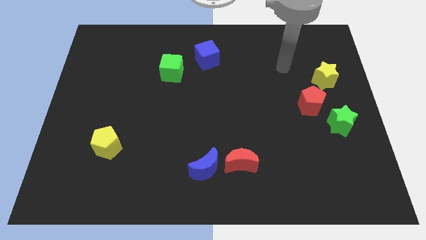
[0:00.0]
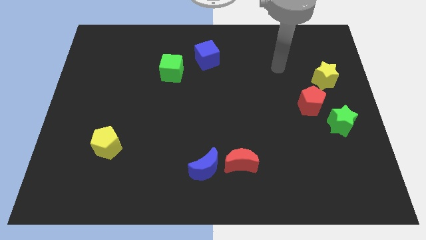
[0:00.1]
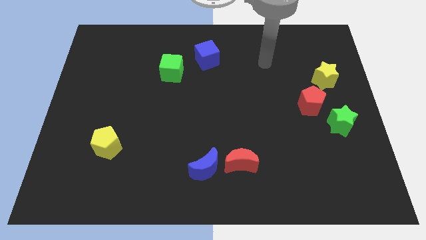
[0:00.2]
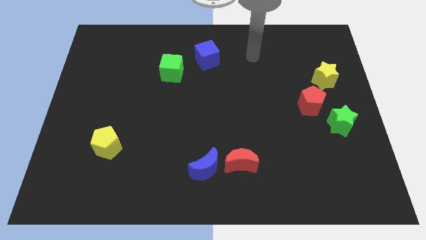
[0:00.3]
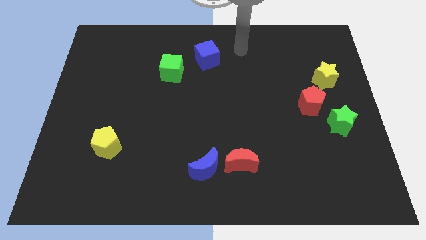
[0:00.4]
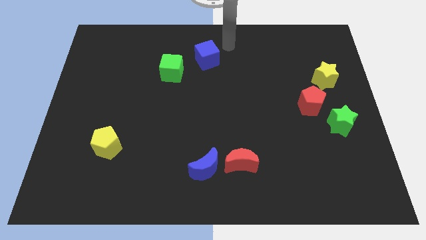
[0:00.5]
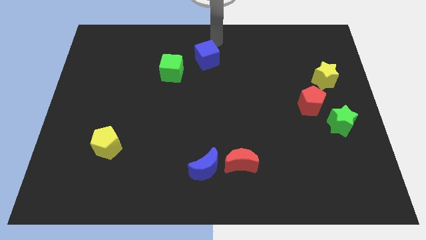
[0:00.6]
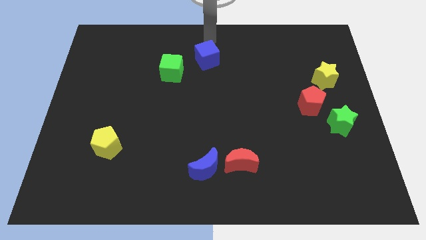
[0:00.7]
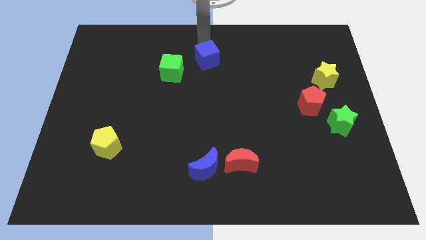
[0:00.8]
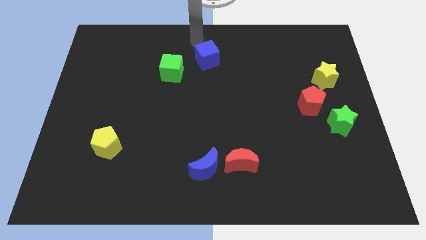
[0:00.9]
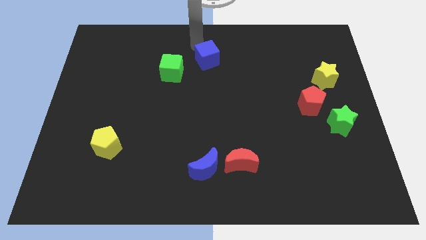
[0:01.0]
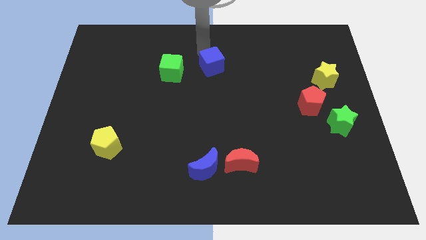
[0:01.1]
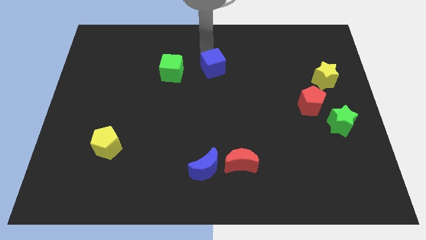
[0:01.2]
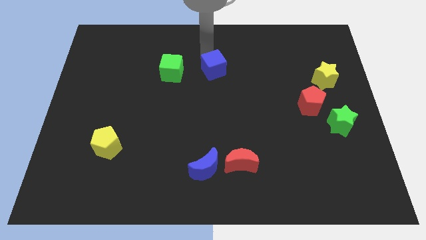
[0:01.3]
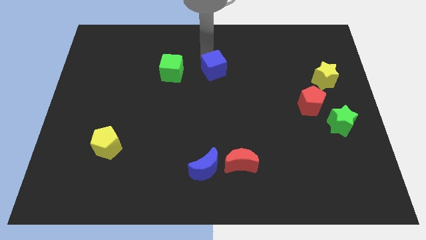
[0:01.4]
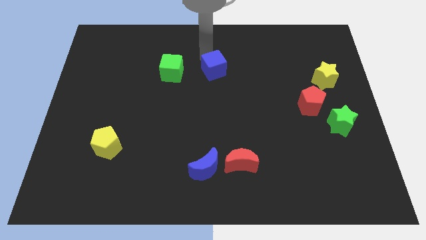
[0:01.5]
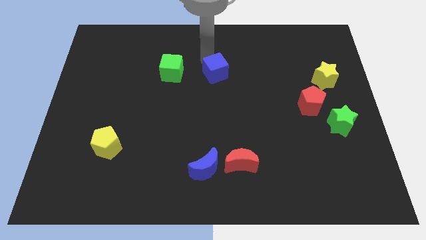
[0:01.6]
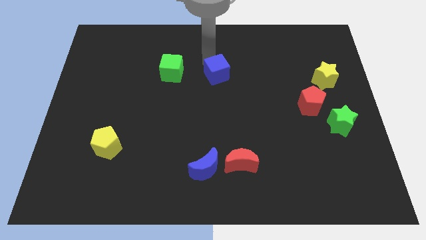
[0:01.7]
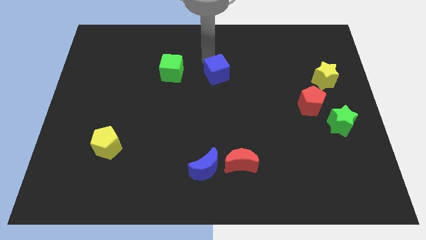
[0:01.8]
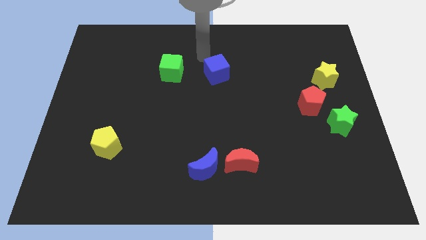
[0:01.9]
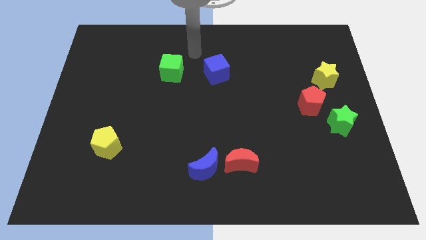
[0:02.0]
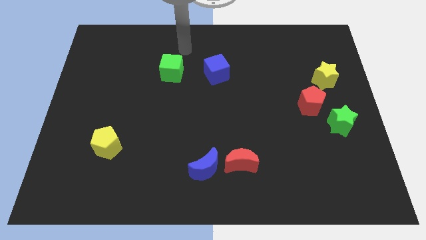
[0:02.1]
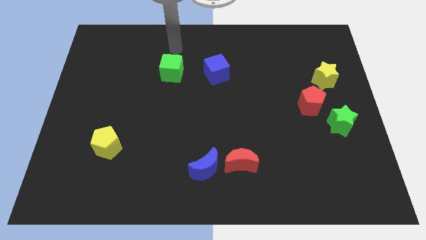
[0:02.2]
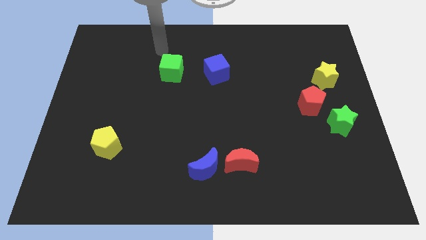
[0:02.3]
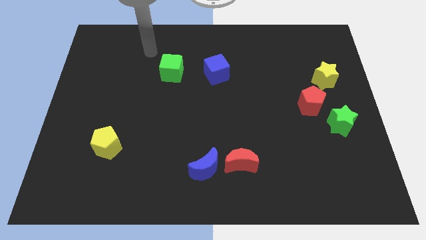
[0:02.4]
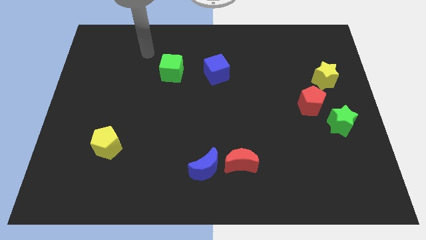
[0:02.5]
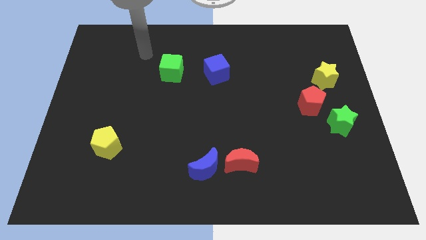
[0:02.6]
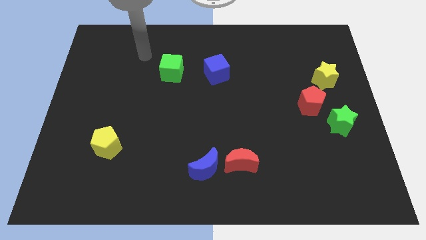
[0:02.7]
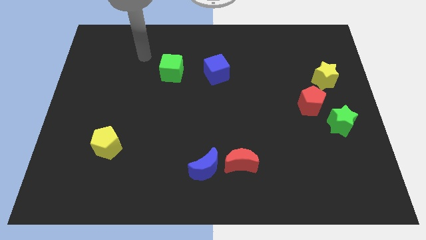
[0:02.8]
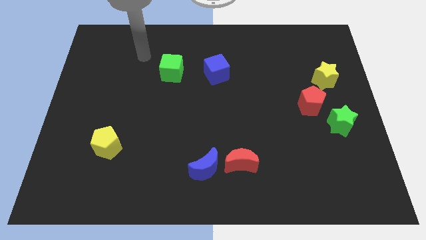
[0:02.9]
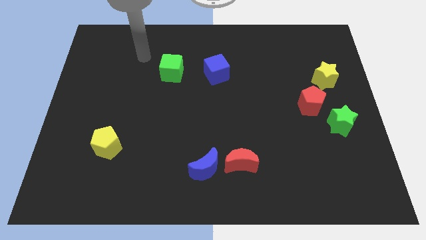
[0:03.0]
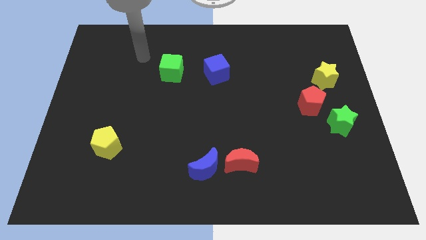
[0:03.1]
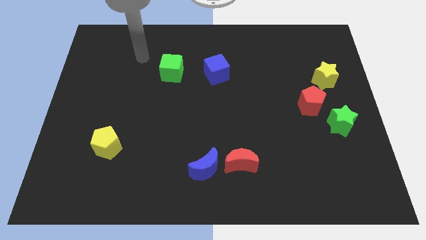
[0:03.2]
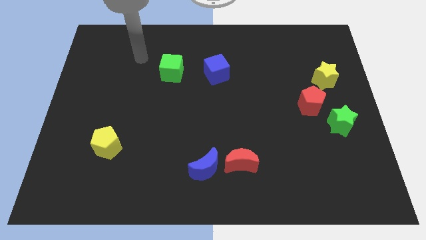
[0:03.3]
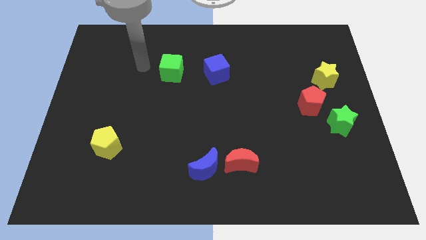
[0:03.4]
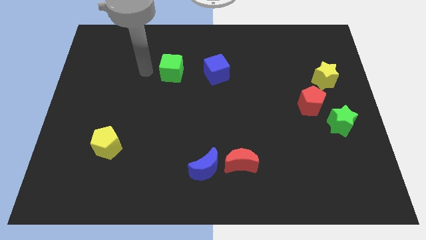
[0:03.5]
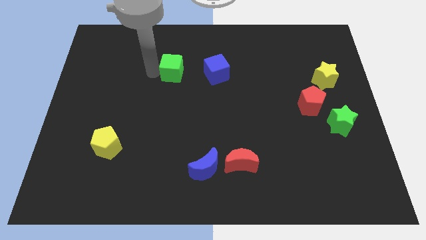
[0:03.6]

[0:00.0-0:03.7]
move the blue cube slightly towards the center of the board

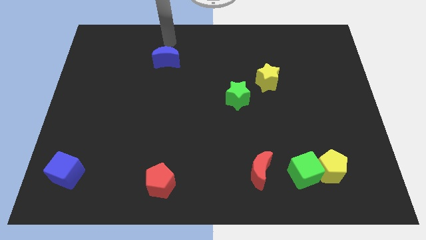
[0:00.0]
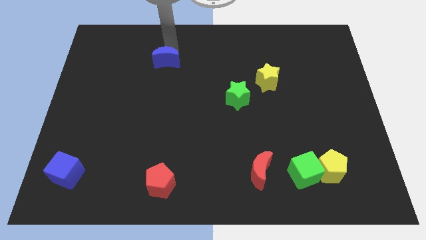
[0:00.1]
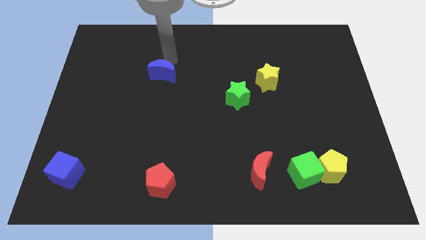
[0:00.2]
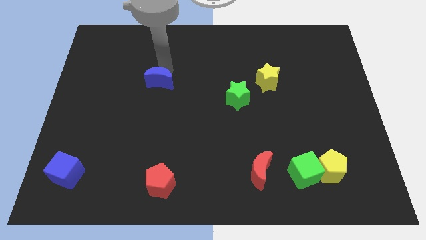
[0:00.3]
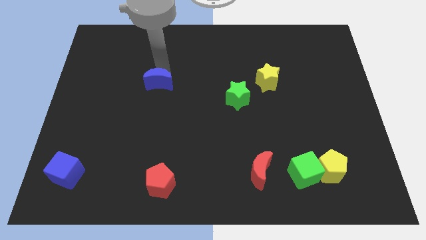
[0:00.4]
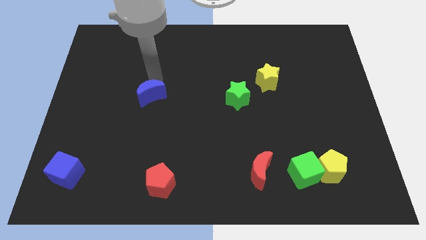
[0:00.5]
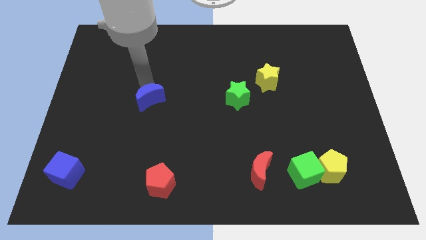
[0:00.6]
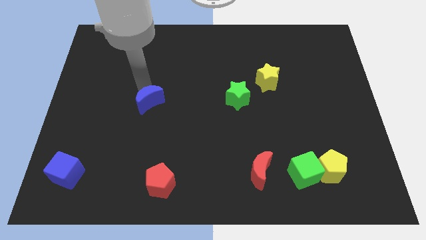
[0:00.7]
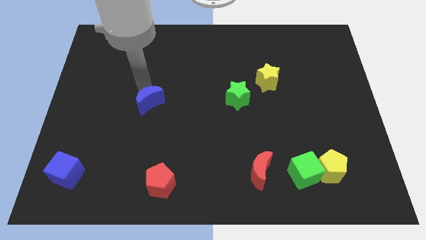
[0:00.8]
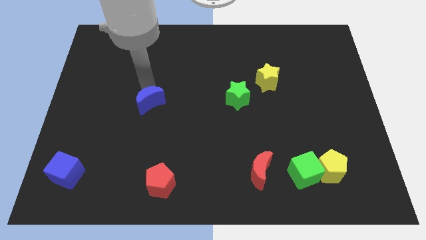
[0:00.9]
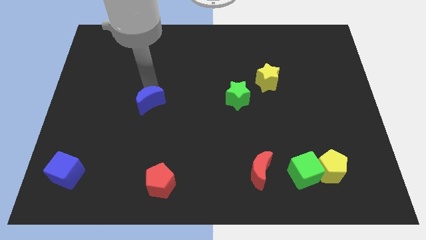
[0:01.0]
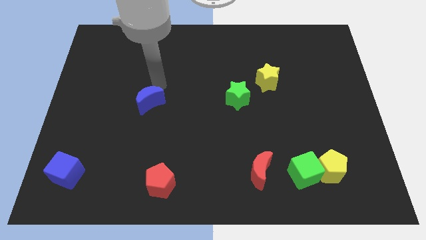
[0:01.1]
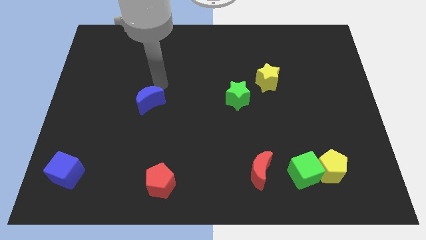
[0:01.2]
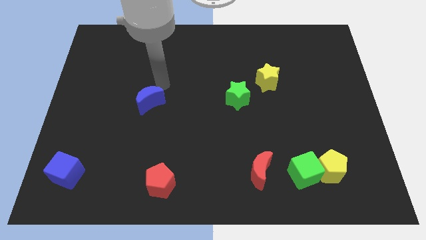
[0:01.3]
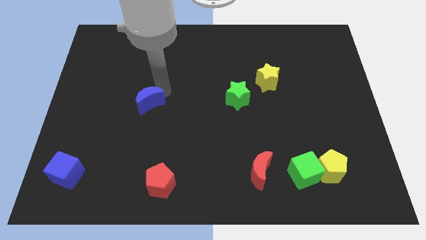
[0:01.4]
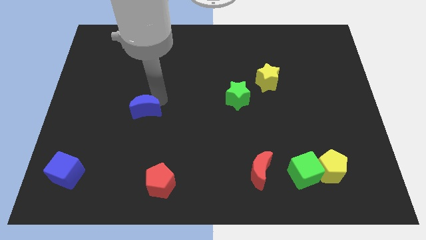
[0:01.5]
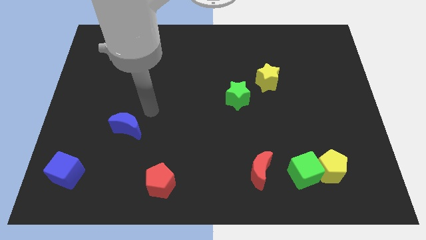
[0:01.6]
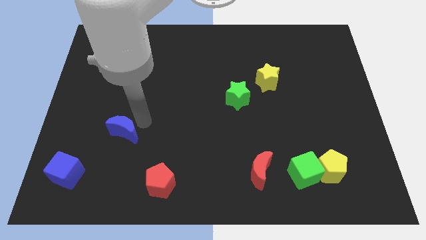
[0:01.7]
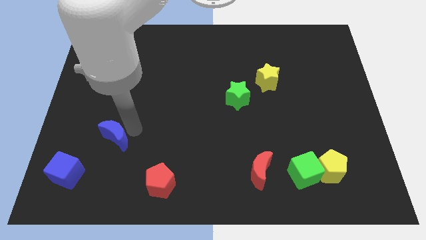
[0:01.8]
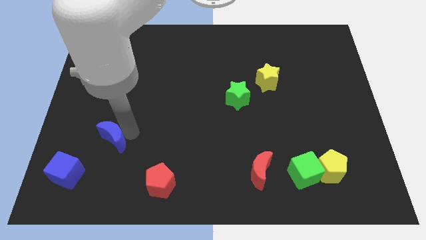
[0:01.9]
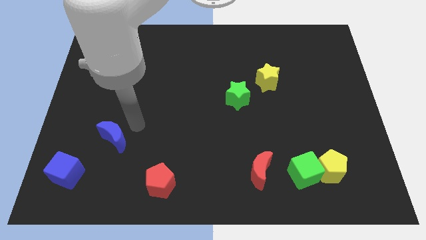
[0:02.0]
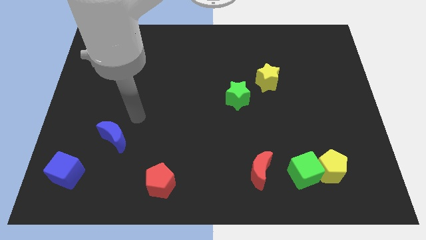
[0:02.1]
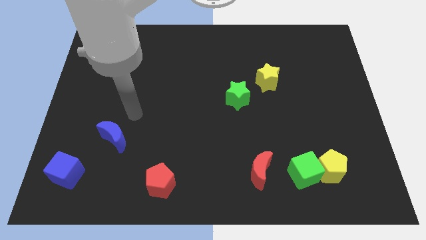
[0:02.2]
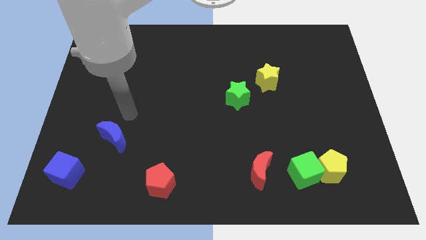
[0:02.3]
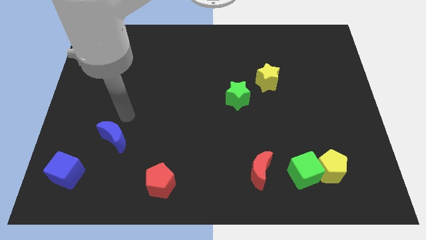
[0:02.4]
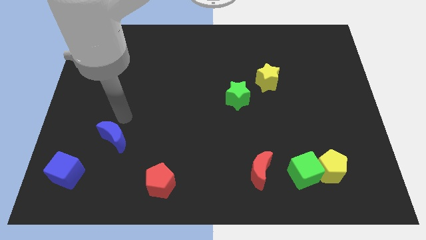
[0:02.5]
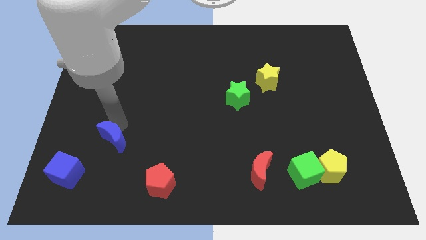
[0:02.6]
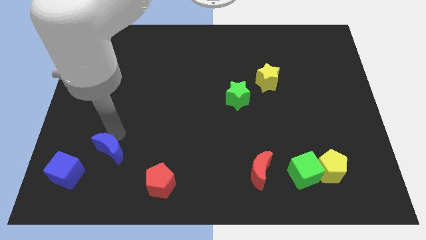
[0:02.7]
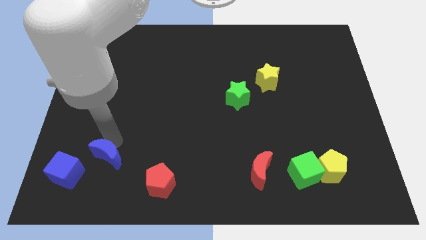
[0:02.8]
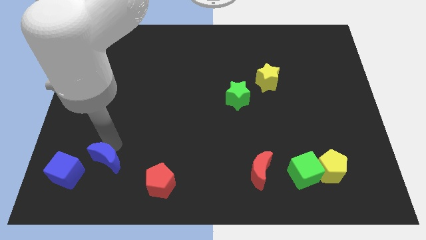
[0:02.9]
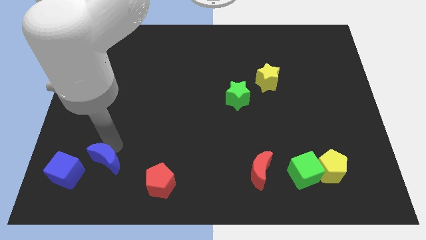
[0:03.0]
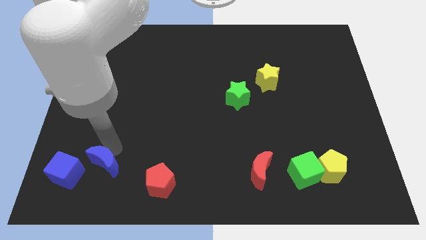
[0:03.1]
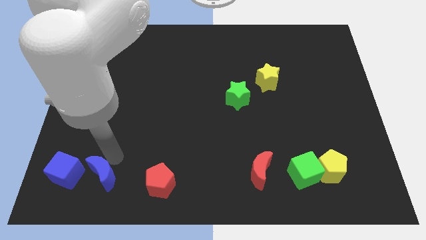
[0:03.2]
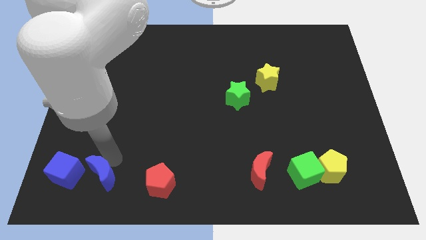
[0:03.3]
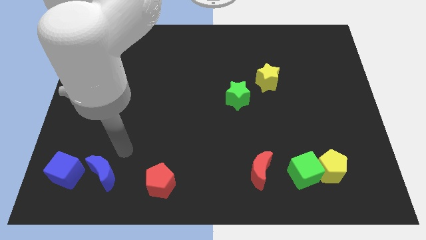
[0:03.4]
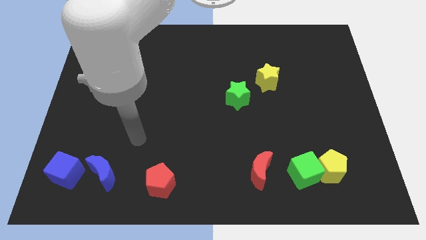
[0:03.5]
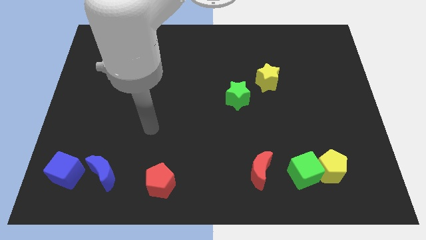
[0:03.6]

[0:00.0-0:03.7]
place the blue moon right to the blue cube

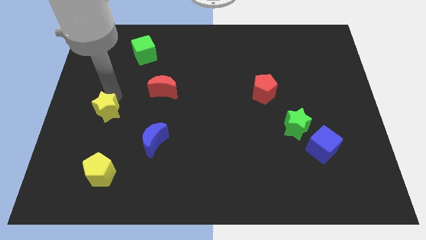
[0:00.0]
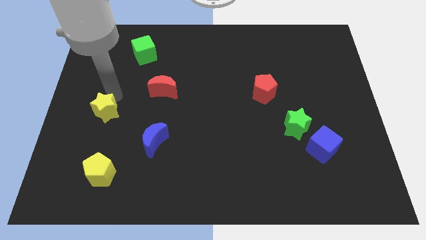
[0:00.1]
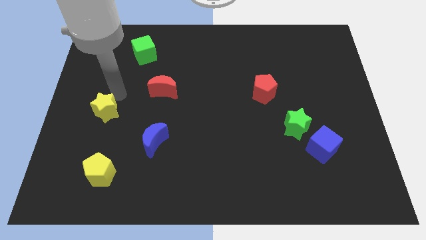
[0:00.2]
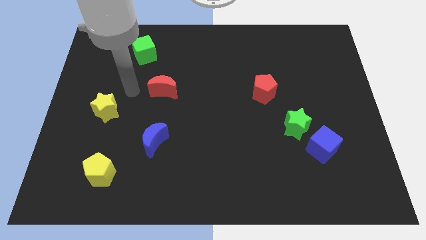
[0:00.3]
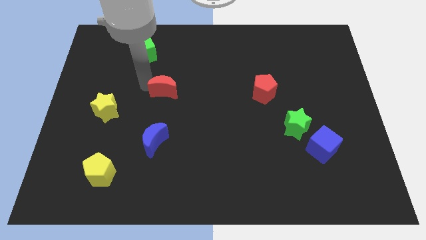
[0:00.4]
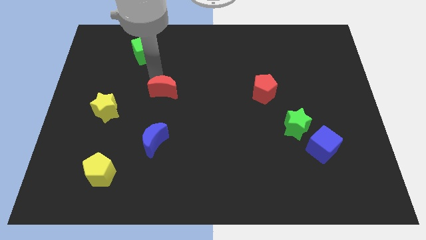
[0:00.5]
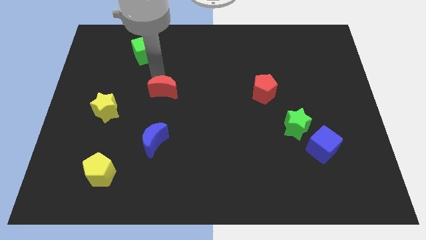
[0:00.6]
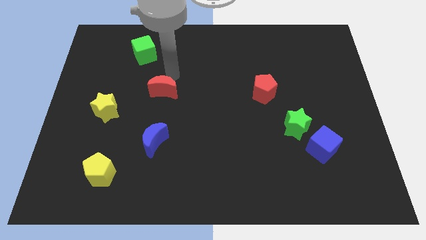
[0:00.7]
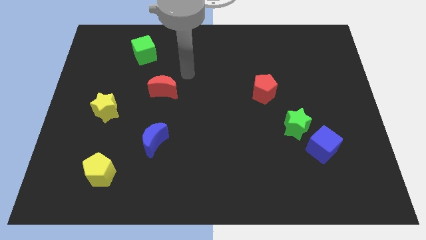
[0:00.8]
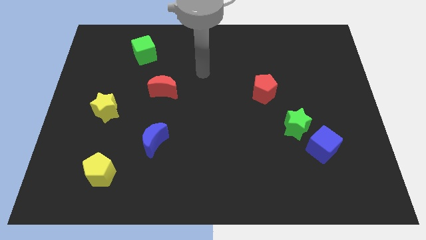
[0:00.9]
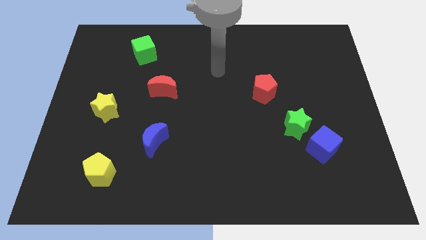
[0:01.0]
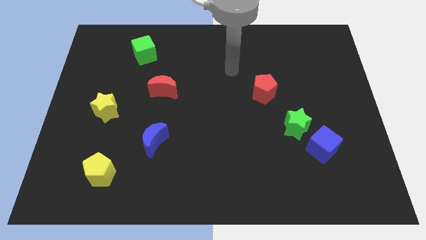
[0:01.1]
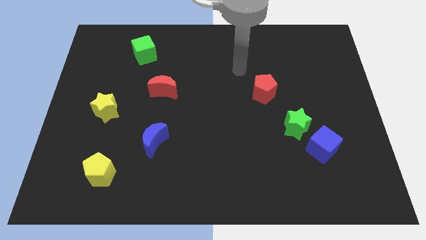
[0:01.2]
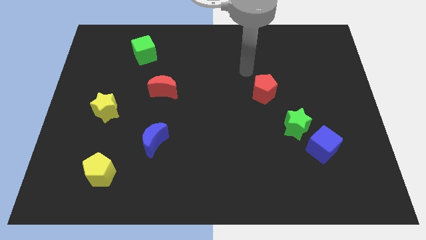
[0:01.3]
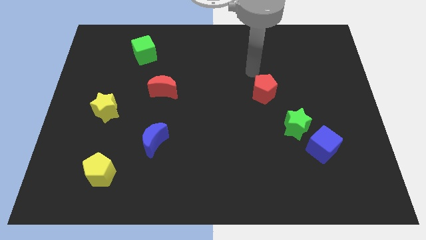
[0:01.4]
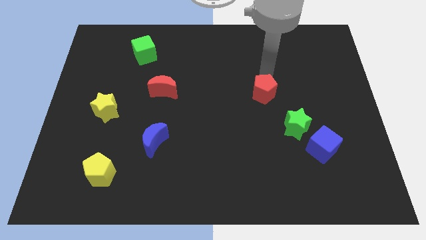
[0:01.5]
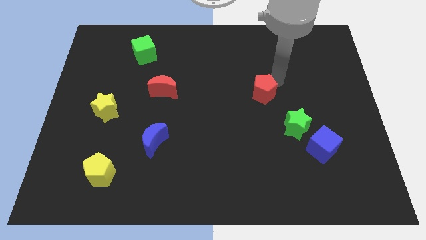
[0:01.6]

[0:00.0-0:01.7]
point your arm towards red pentagon
